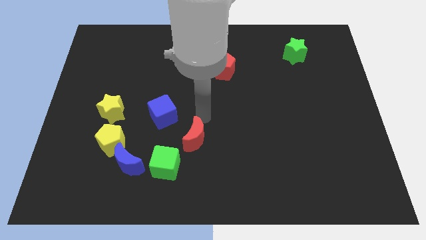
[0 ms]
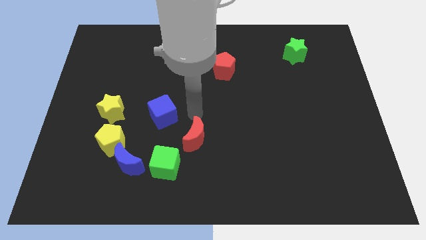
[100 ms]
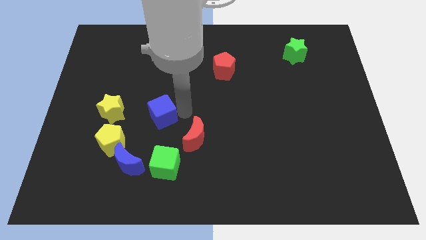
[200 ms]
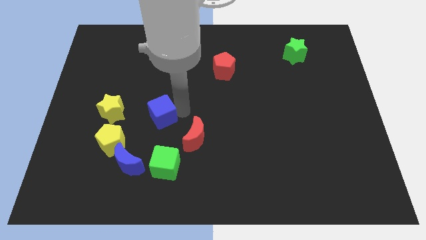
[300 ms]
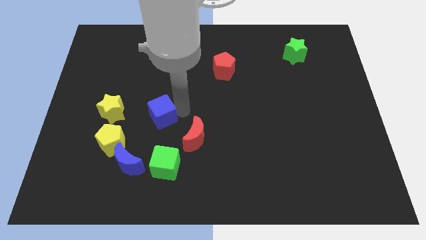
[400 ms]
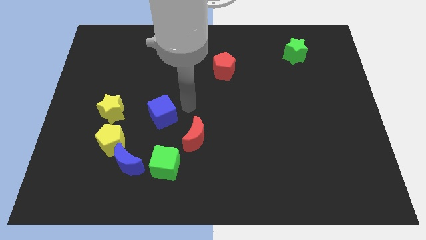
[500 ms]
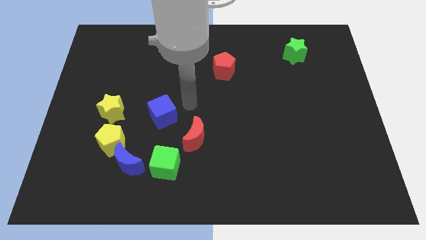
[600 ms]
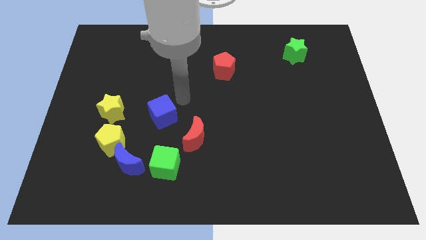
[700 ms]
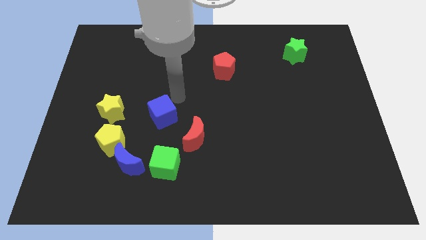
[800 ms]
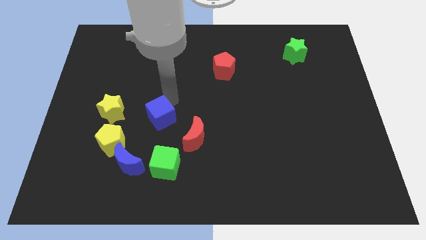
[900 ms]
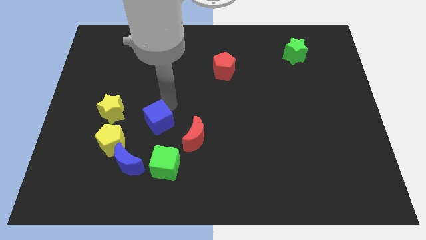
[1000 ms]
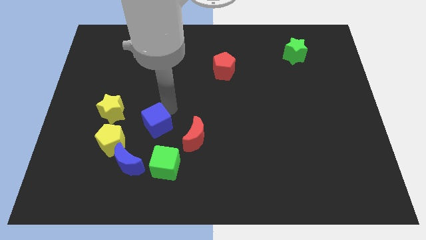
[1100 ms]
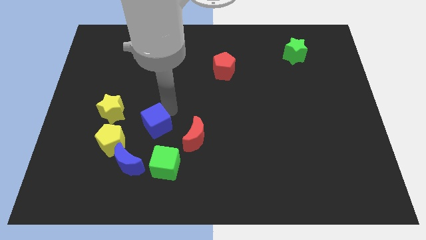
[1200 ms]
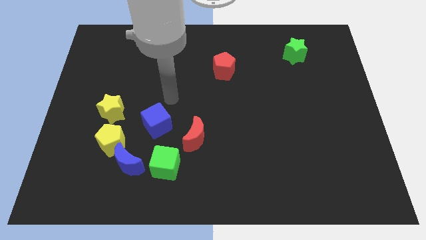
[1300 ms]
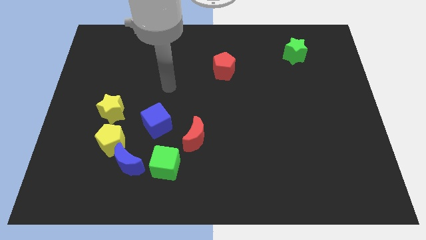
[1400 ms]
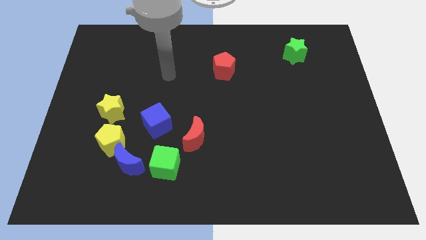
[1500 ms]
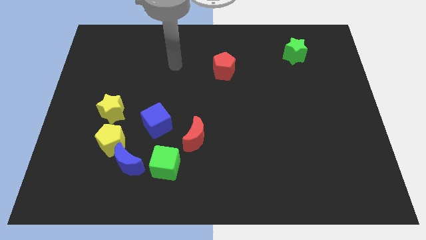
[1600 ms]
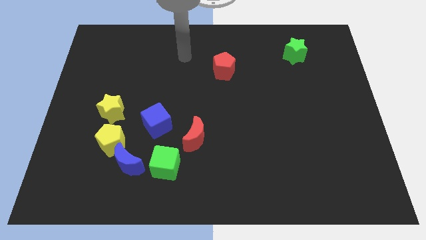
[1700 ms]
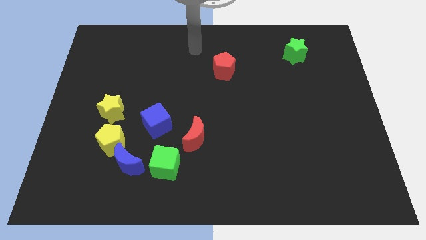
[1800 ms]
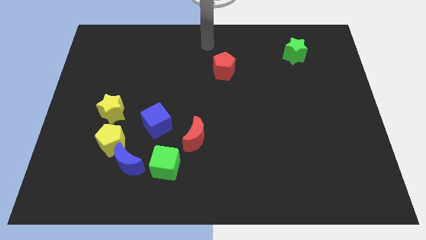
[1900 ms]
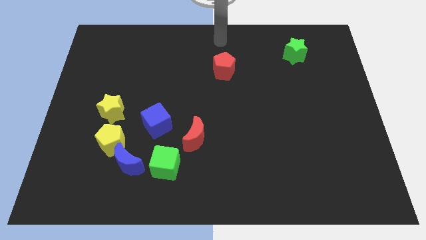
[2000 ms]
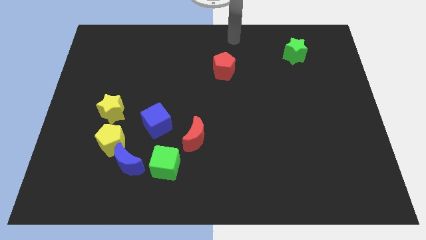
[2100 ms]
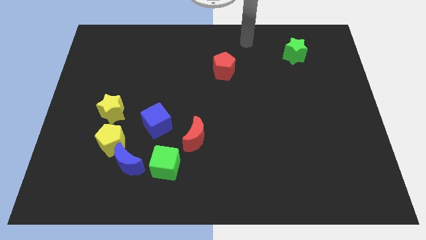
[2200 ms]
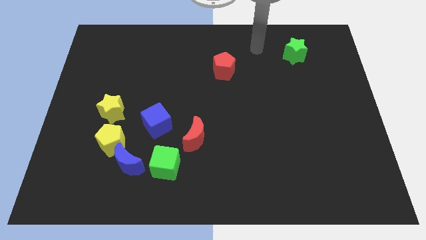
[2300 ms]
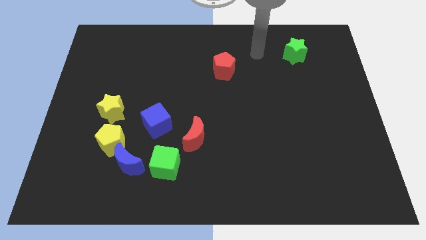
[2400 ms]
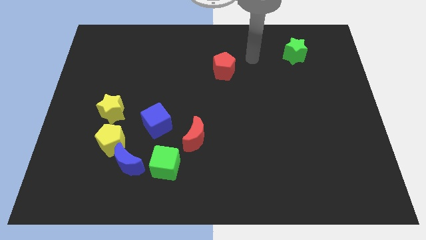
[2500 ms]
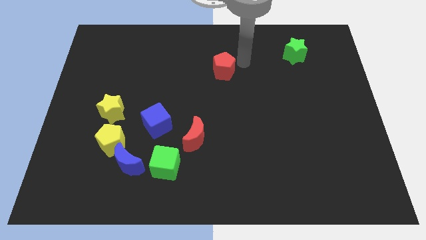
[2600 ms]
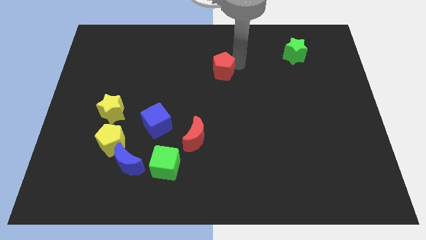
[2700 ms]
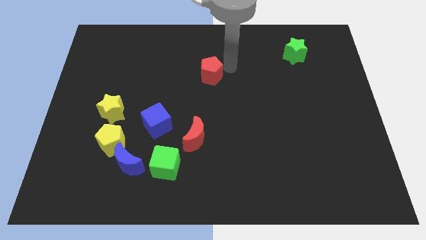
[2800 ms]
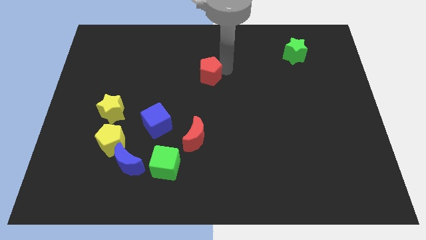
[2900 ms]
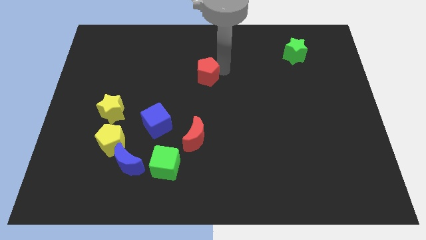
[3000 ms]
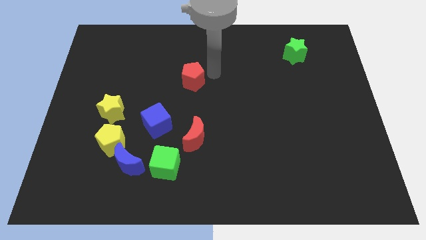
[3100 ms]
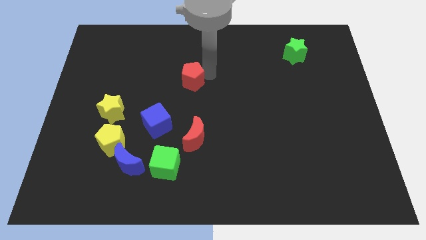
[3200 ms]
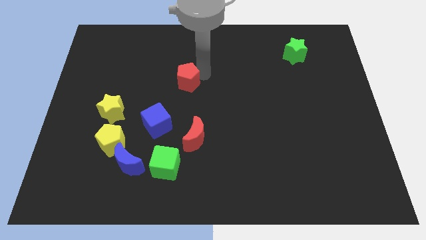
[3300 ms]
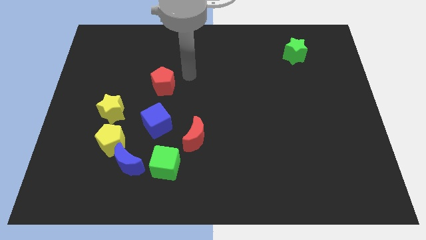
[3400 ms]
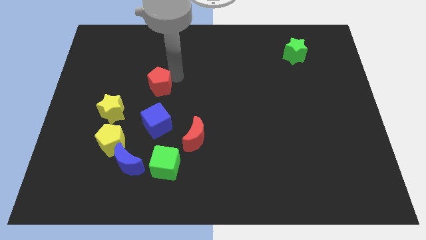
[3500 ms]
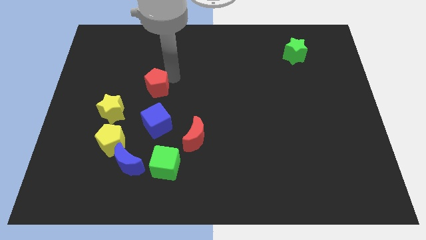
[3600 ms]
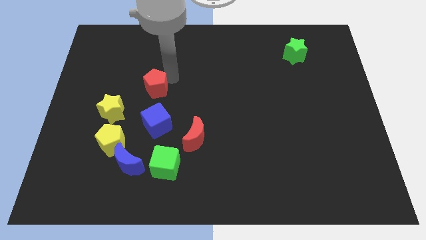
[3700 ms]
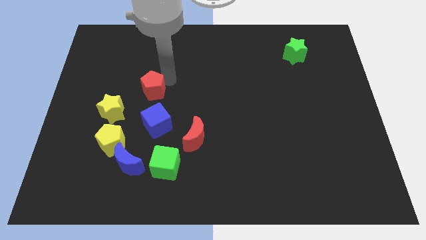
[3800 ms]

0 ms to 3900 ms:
push blue square red pentagon to the group of blocks

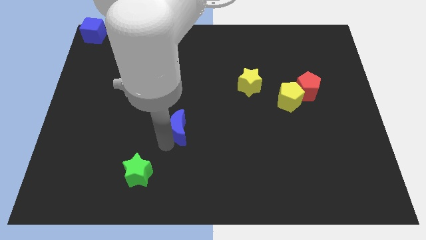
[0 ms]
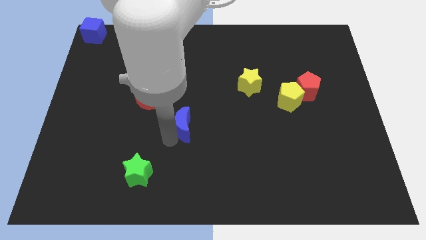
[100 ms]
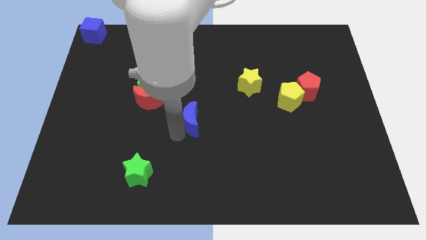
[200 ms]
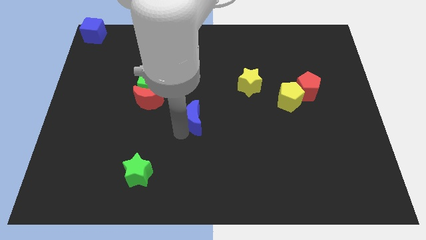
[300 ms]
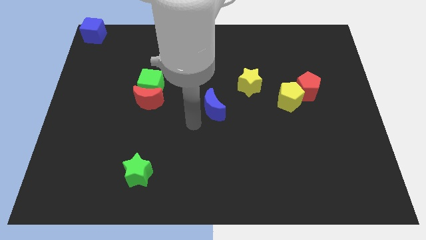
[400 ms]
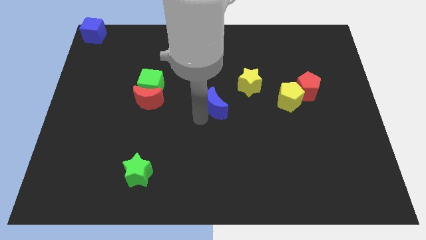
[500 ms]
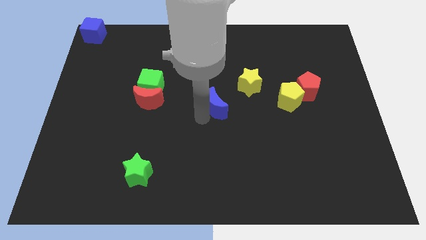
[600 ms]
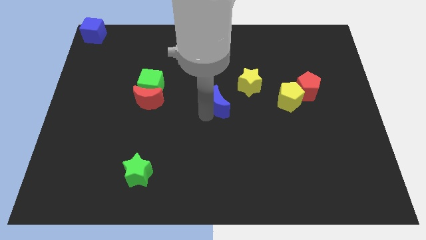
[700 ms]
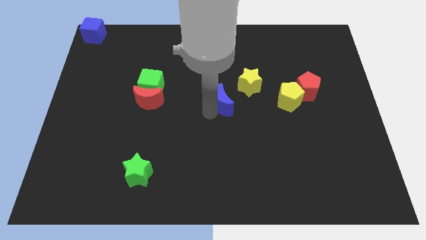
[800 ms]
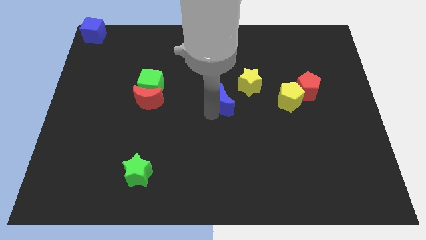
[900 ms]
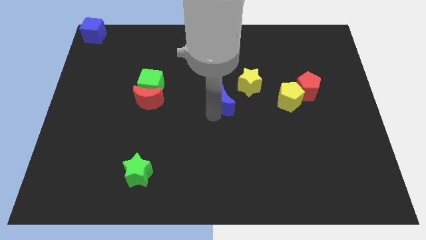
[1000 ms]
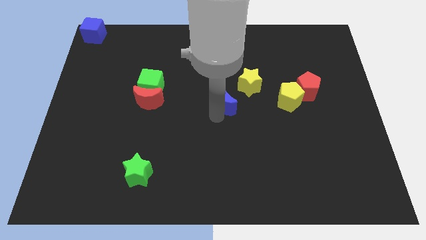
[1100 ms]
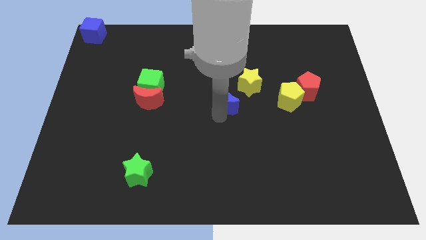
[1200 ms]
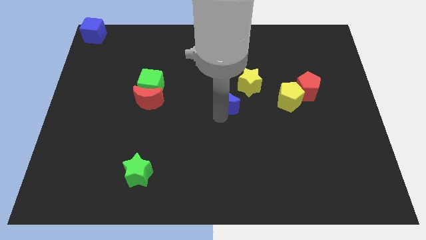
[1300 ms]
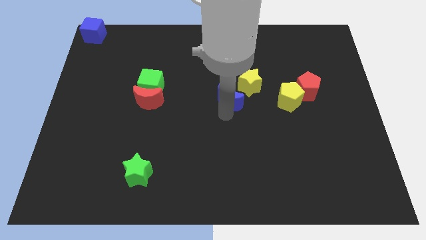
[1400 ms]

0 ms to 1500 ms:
push the blue crescent slightly towards the yellow star

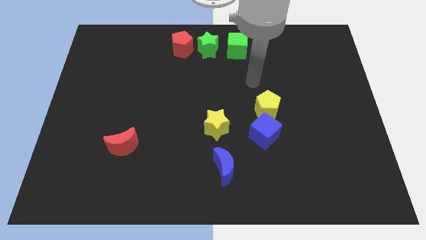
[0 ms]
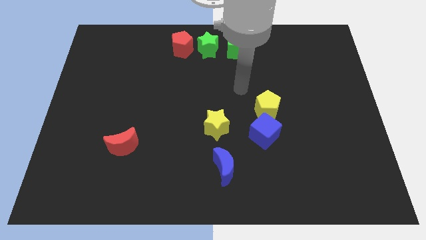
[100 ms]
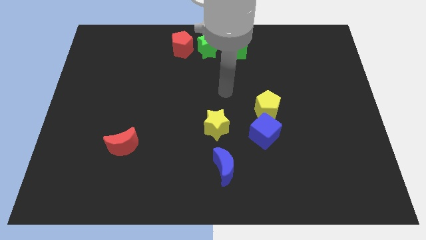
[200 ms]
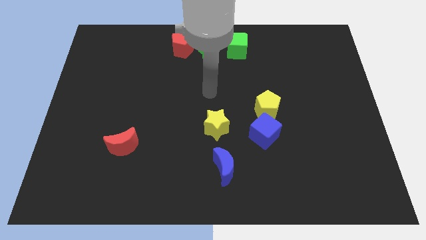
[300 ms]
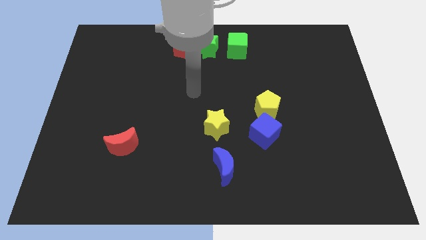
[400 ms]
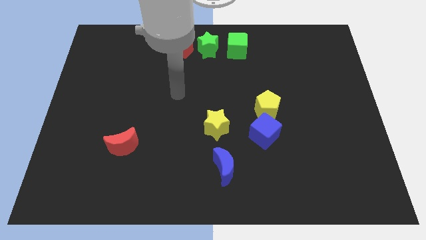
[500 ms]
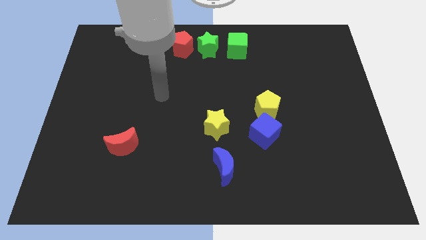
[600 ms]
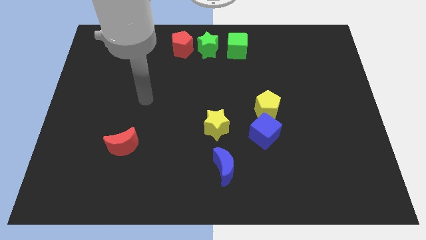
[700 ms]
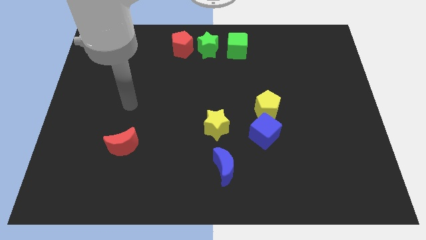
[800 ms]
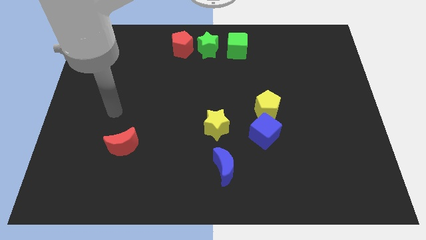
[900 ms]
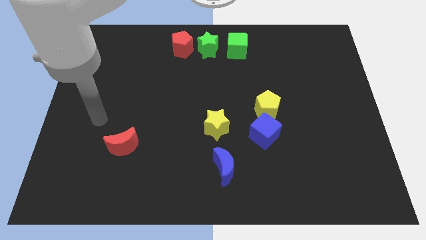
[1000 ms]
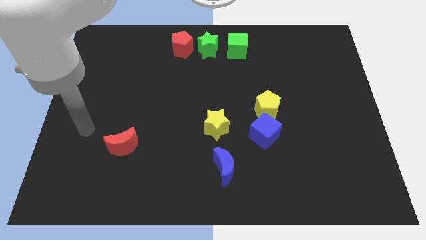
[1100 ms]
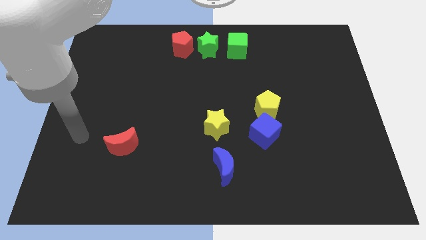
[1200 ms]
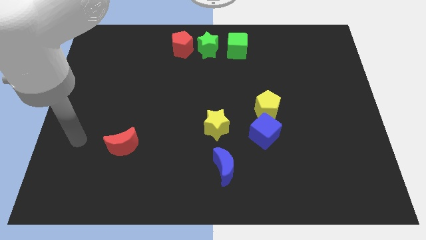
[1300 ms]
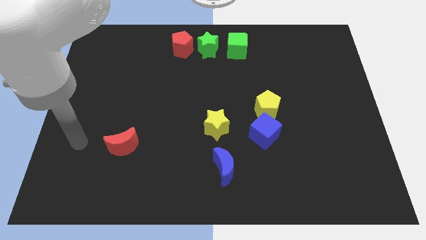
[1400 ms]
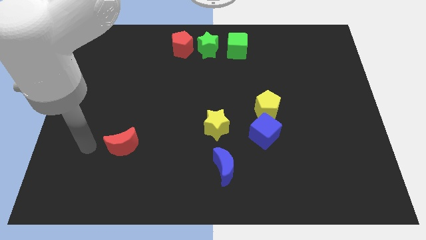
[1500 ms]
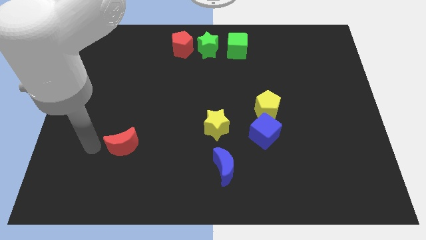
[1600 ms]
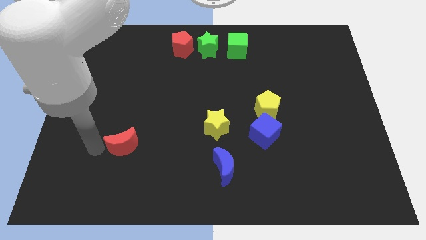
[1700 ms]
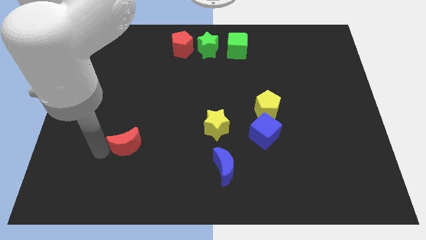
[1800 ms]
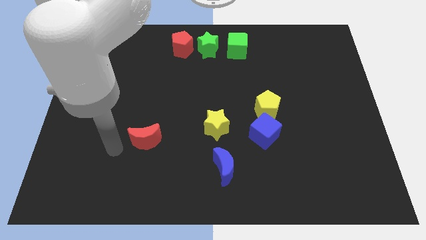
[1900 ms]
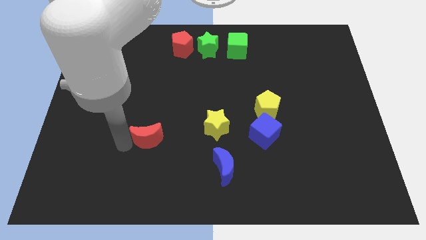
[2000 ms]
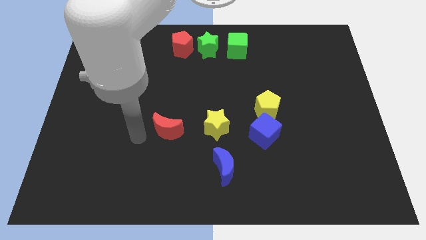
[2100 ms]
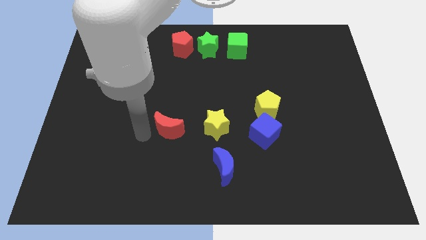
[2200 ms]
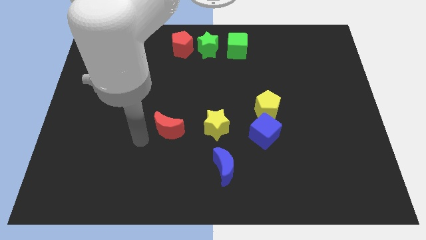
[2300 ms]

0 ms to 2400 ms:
move the red crescent towards yellow star

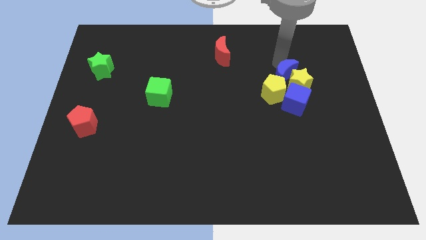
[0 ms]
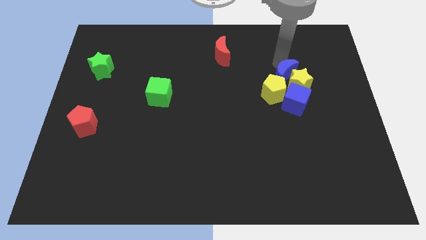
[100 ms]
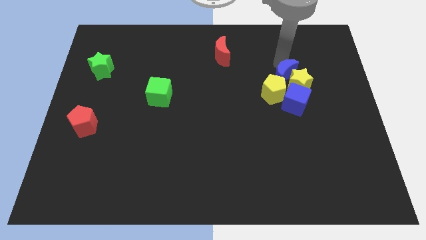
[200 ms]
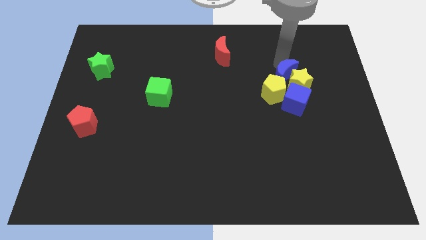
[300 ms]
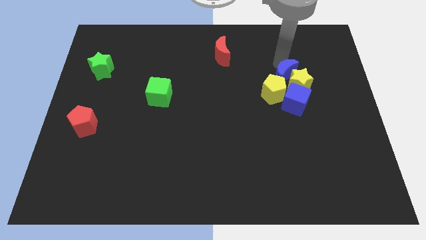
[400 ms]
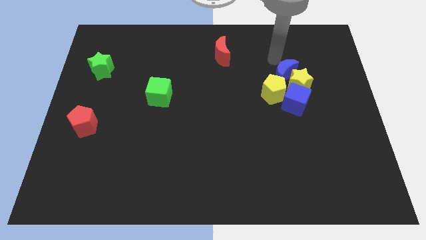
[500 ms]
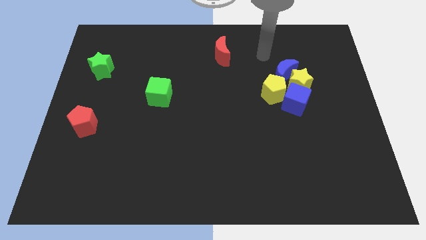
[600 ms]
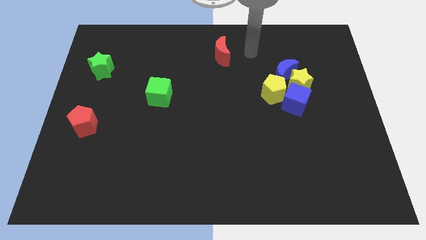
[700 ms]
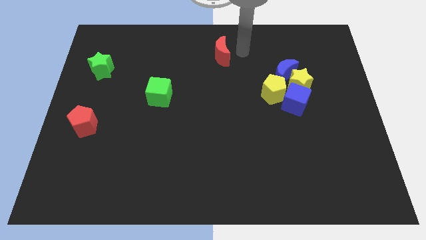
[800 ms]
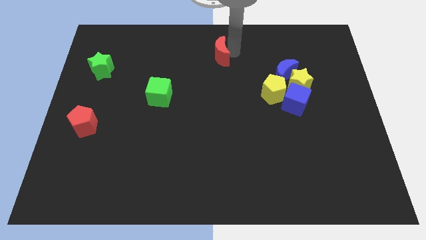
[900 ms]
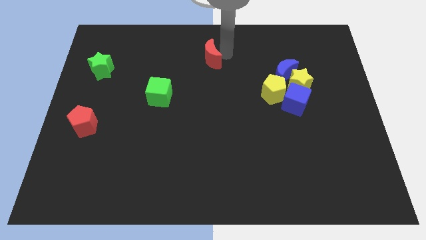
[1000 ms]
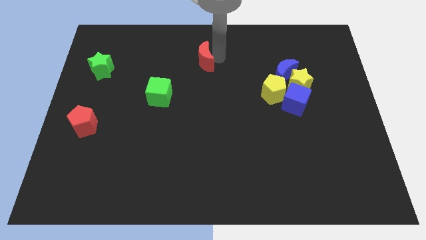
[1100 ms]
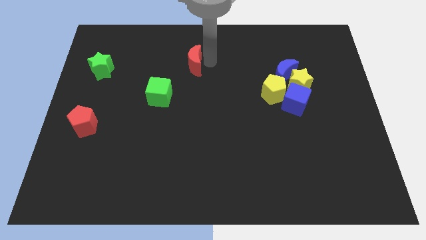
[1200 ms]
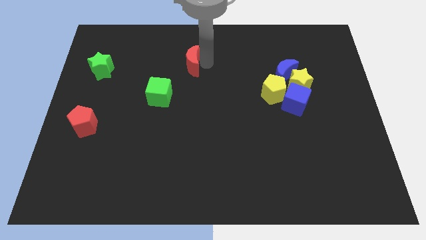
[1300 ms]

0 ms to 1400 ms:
move the red moon towards the left
